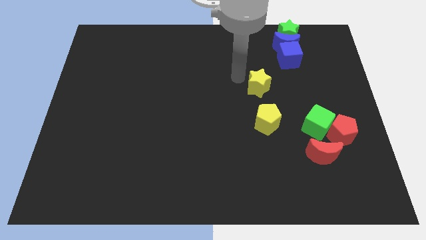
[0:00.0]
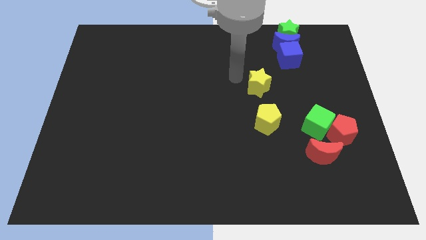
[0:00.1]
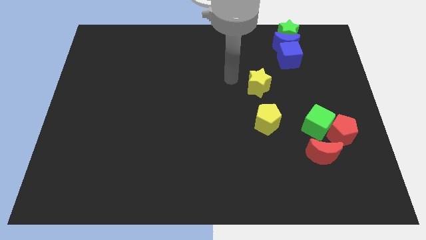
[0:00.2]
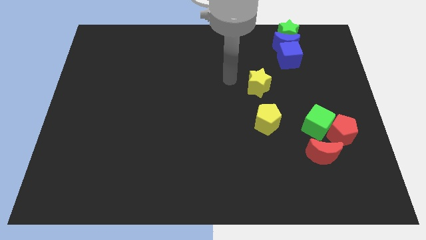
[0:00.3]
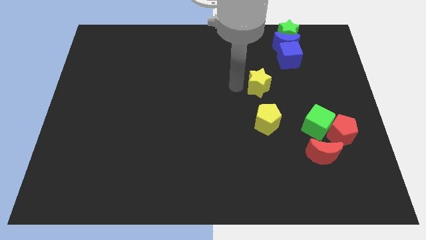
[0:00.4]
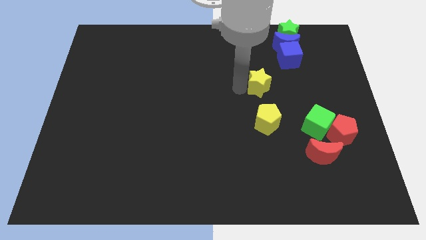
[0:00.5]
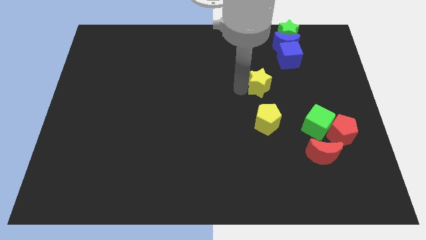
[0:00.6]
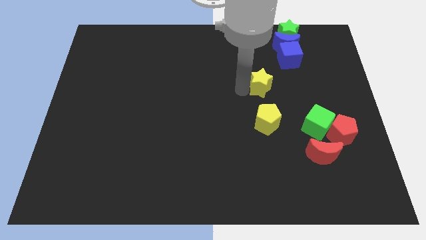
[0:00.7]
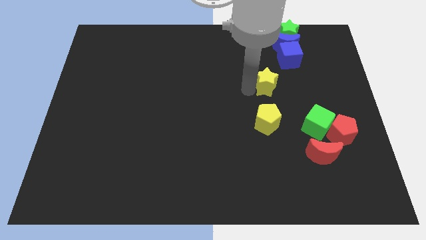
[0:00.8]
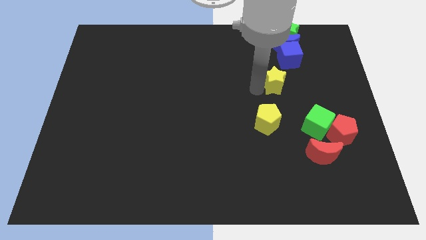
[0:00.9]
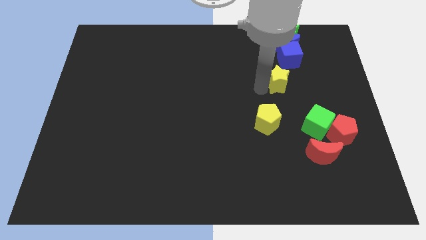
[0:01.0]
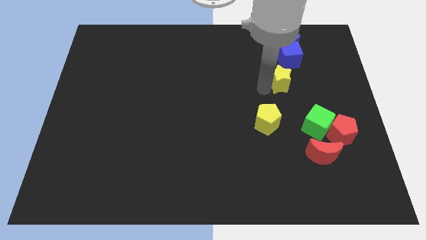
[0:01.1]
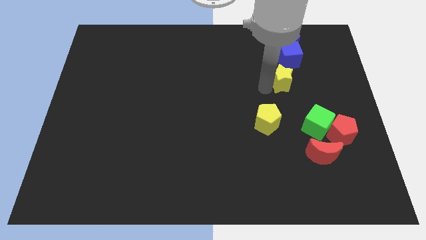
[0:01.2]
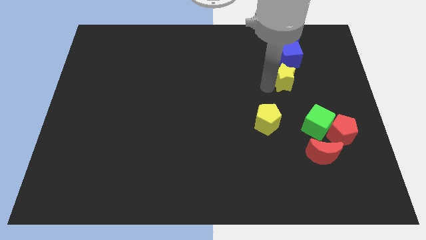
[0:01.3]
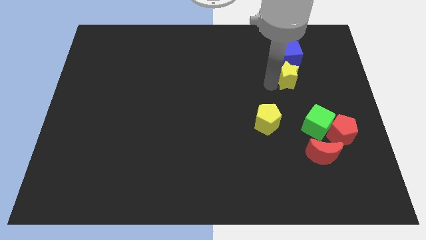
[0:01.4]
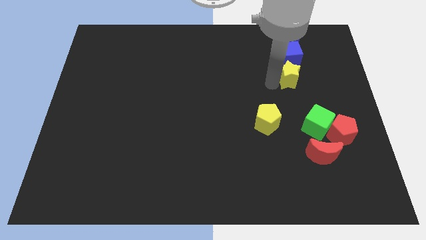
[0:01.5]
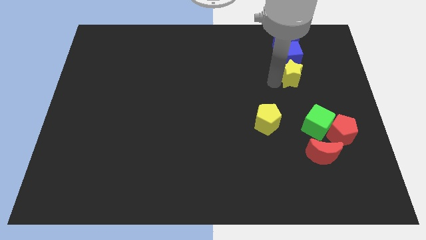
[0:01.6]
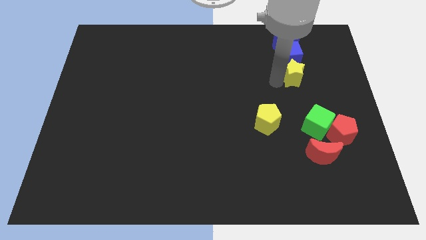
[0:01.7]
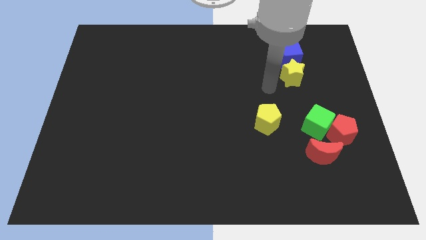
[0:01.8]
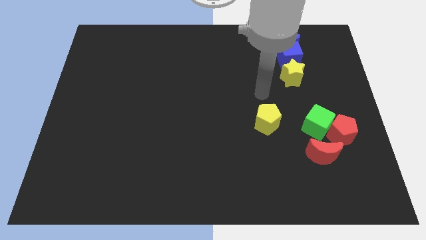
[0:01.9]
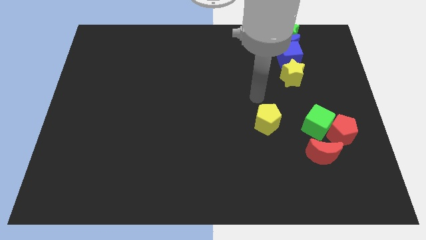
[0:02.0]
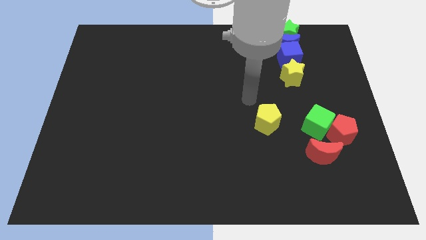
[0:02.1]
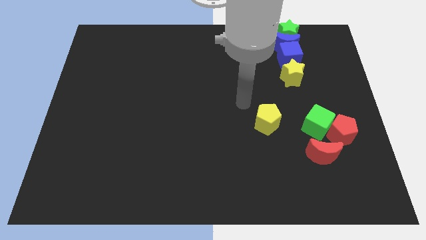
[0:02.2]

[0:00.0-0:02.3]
place the yellow star below to the blue cube

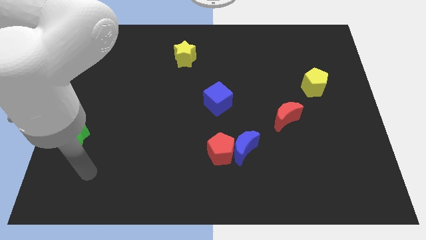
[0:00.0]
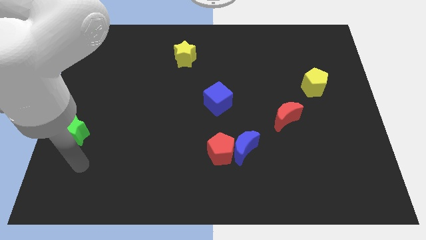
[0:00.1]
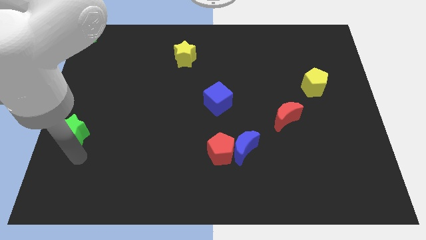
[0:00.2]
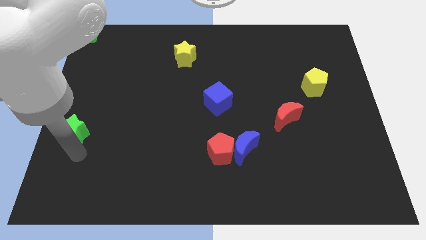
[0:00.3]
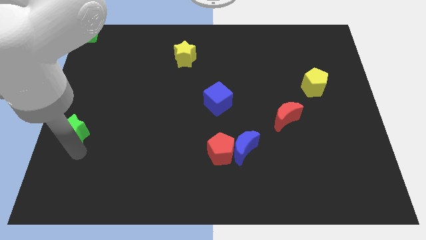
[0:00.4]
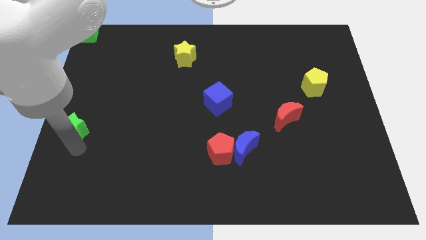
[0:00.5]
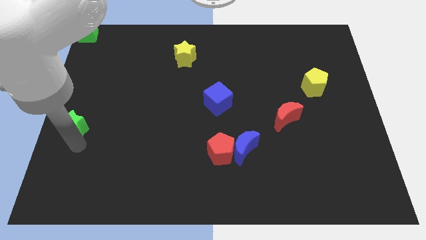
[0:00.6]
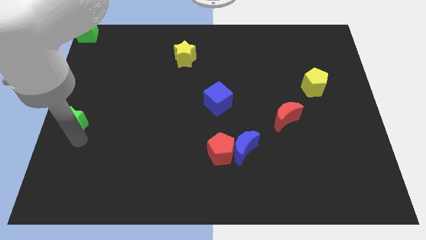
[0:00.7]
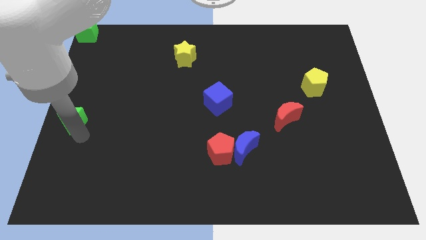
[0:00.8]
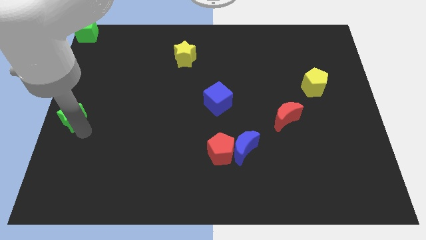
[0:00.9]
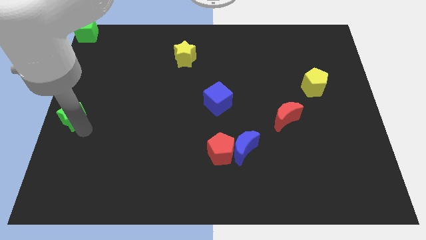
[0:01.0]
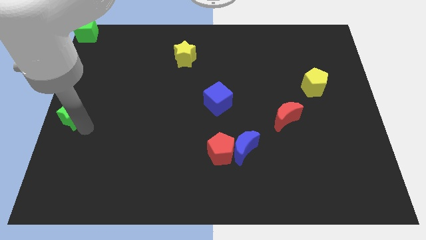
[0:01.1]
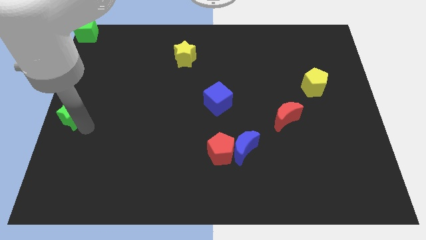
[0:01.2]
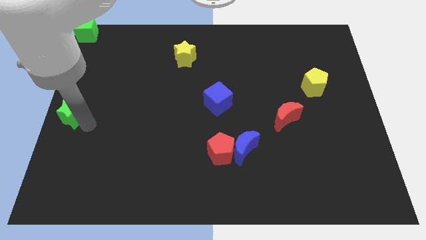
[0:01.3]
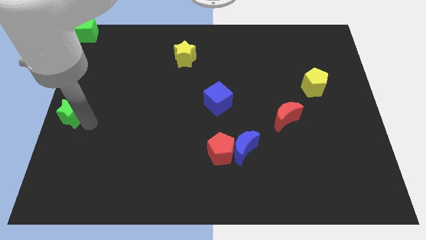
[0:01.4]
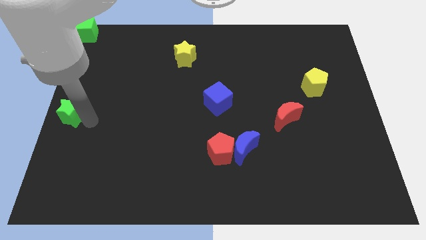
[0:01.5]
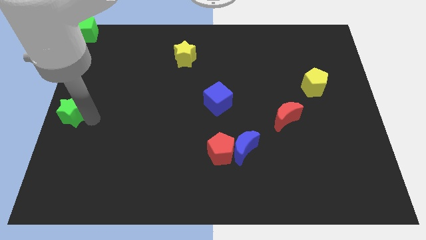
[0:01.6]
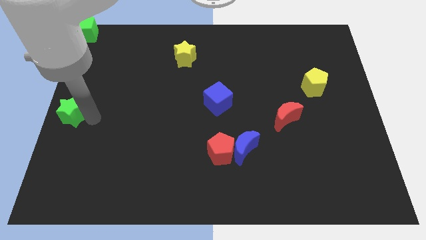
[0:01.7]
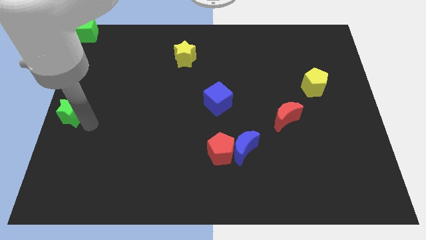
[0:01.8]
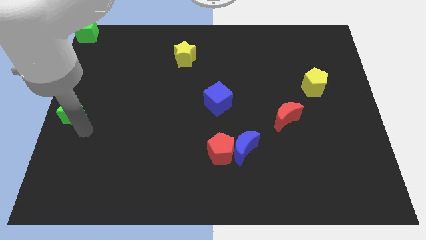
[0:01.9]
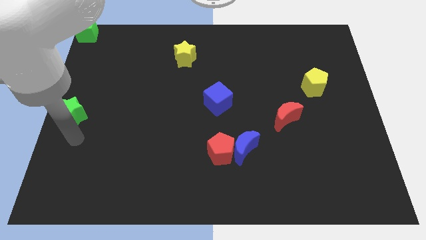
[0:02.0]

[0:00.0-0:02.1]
push the green star to the horizontal left of the blue cube

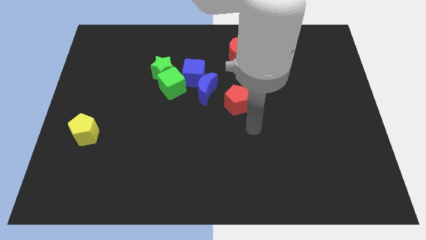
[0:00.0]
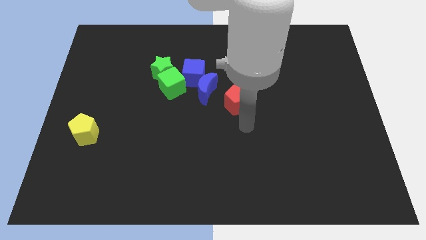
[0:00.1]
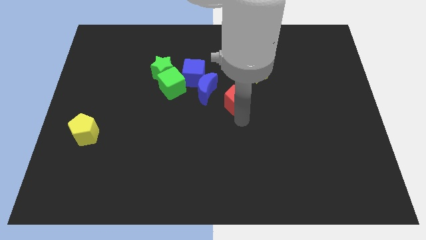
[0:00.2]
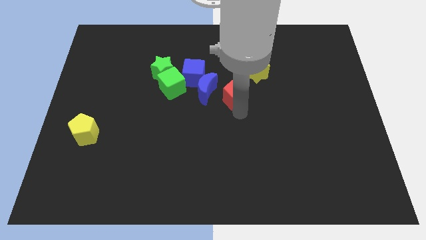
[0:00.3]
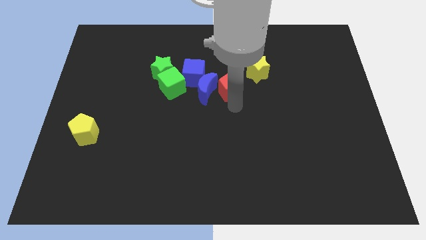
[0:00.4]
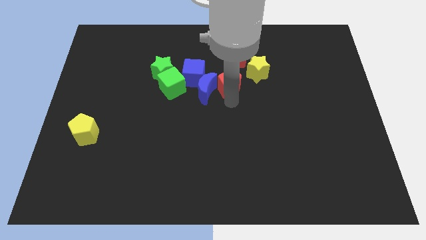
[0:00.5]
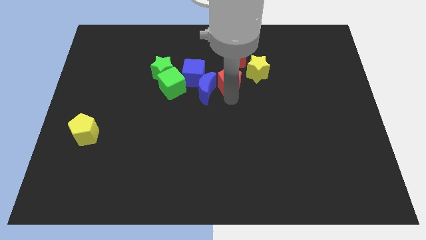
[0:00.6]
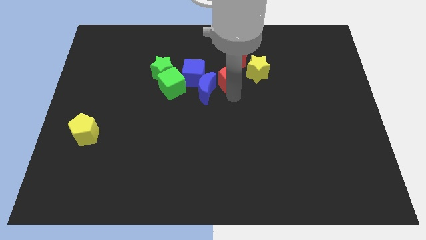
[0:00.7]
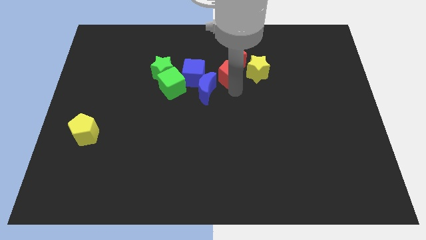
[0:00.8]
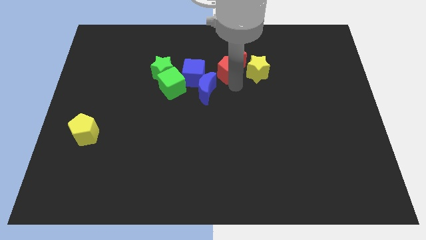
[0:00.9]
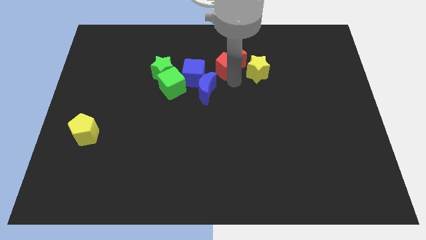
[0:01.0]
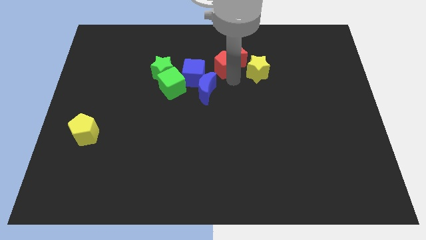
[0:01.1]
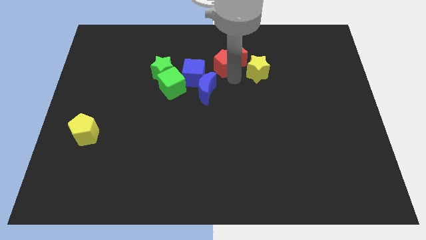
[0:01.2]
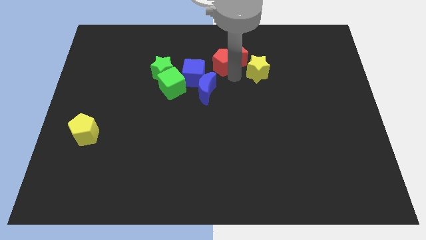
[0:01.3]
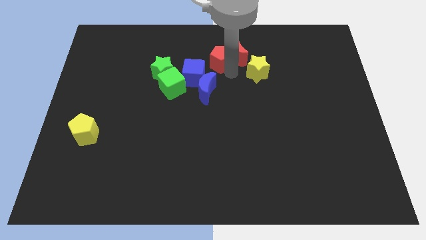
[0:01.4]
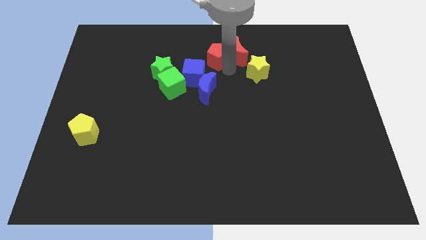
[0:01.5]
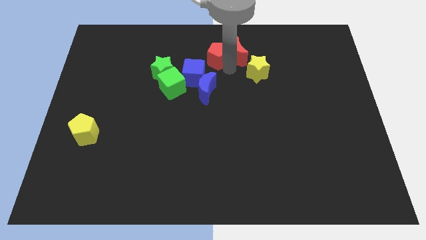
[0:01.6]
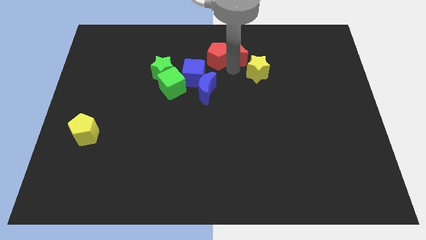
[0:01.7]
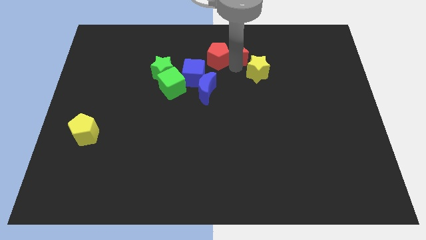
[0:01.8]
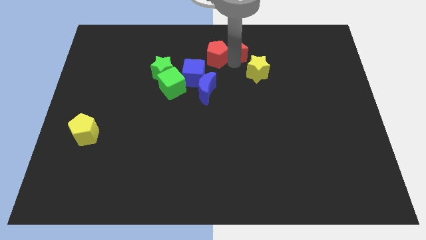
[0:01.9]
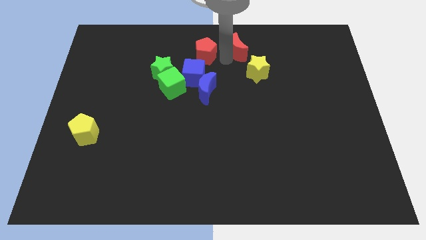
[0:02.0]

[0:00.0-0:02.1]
push red pentagon to the top center of the board

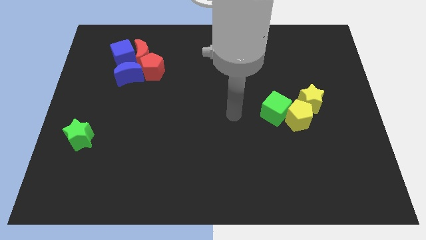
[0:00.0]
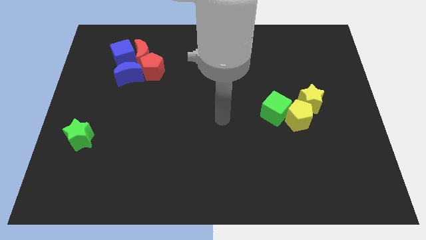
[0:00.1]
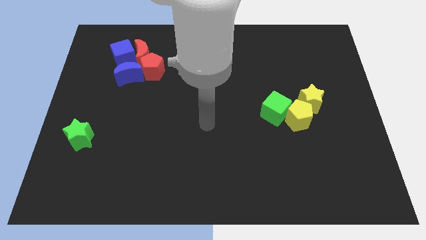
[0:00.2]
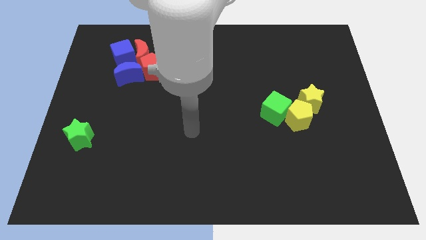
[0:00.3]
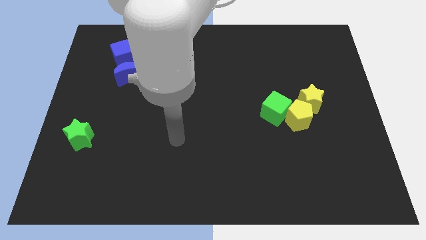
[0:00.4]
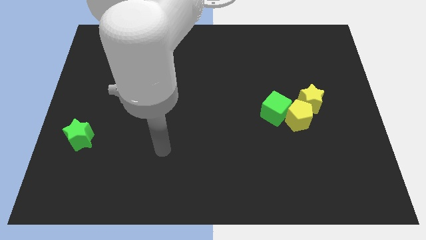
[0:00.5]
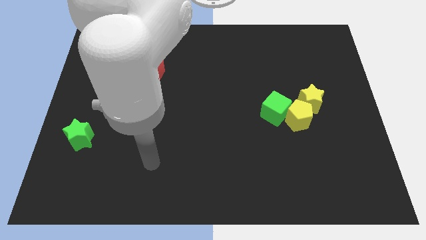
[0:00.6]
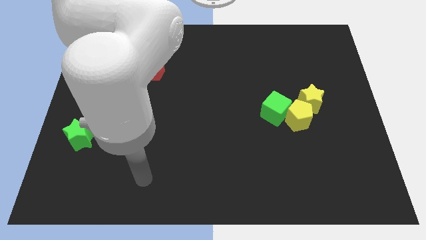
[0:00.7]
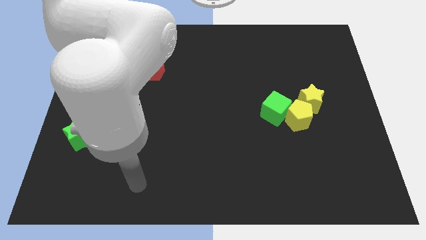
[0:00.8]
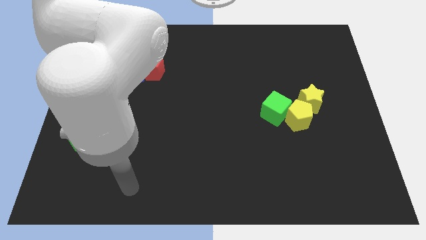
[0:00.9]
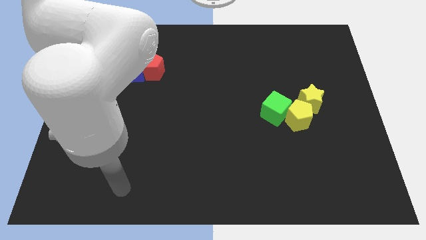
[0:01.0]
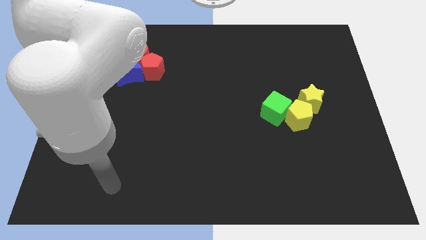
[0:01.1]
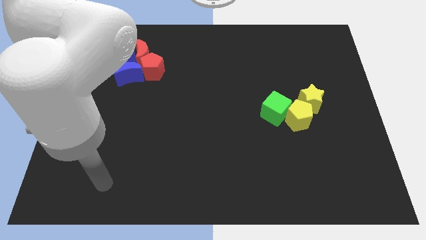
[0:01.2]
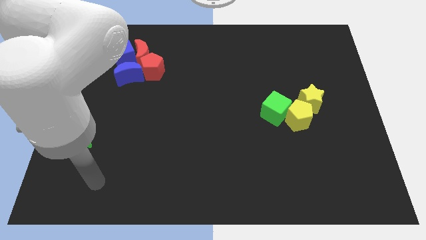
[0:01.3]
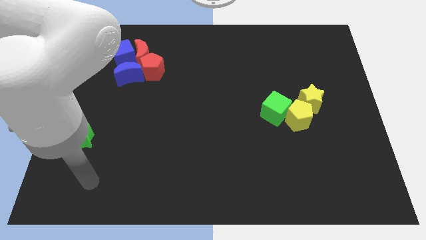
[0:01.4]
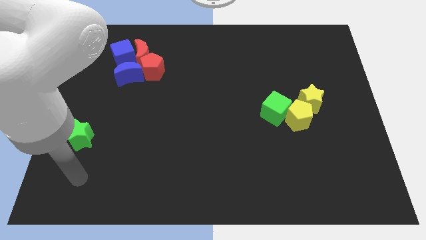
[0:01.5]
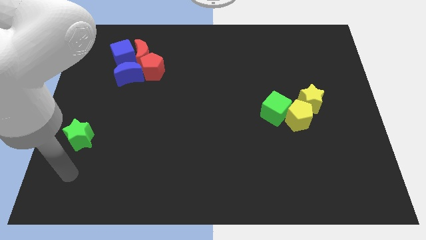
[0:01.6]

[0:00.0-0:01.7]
place your arm at the bottom side of the green star

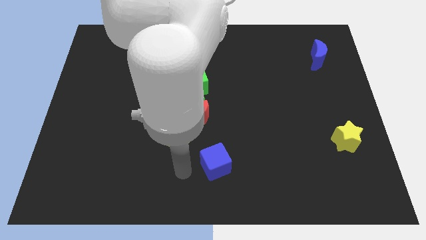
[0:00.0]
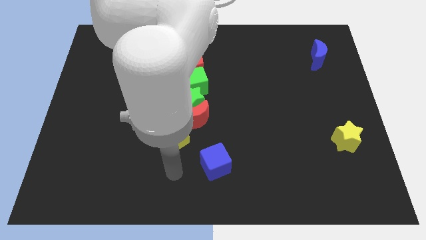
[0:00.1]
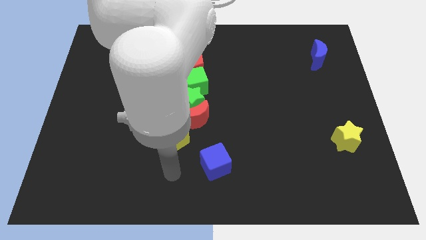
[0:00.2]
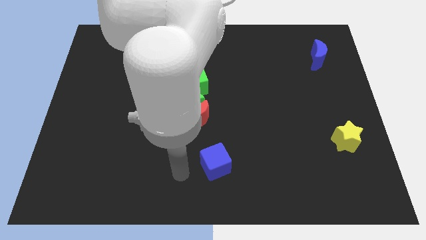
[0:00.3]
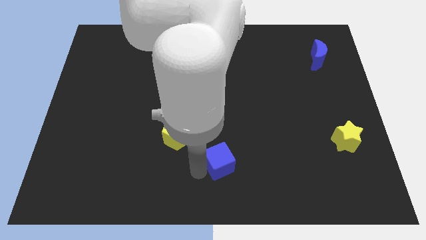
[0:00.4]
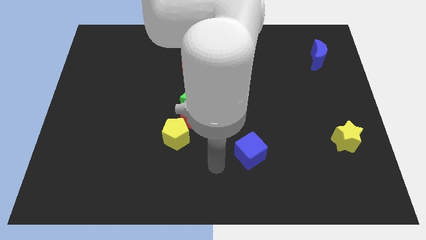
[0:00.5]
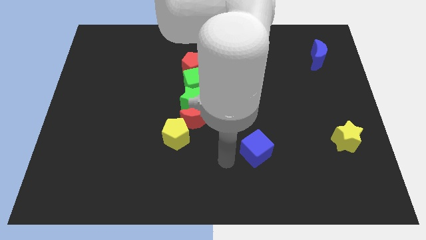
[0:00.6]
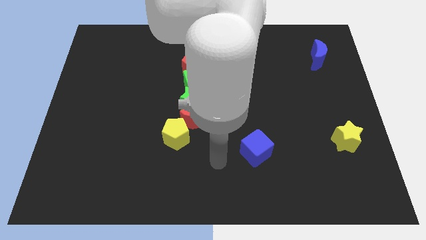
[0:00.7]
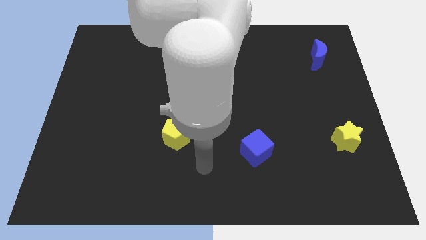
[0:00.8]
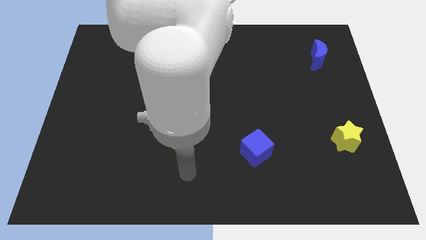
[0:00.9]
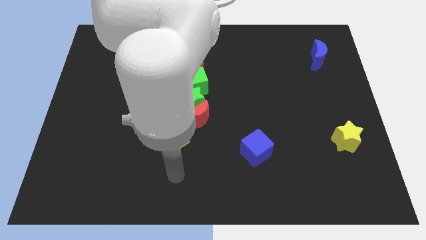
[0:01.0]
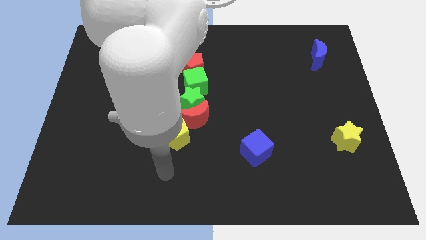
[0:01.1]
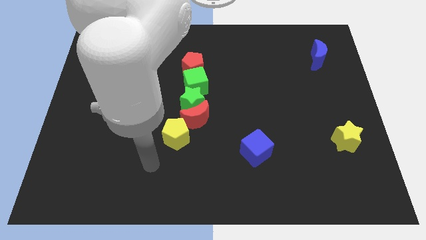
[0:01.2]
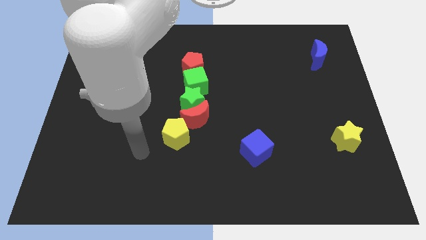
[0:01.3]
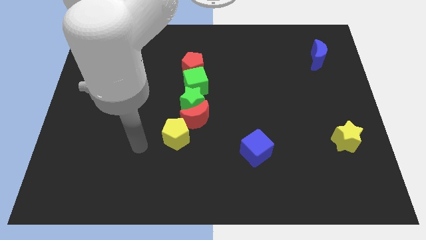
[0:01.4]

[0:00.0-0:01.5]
push the blue cube to the right side of the board
